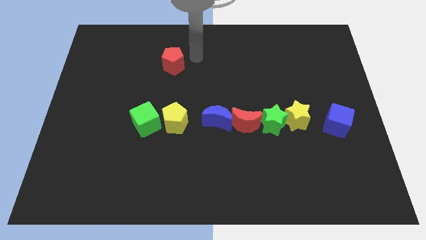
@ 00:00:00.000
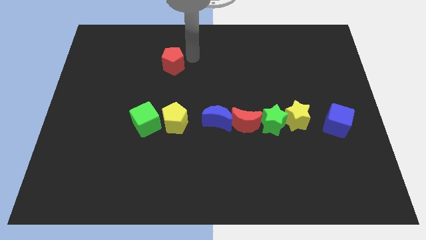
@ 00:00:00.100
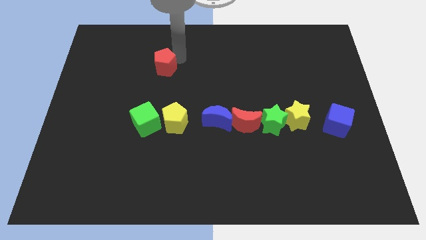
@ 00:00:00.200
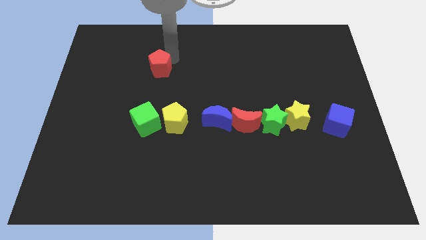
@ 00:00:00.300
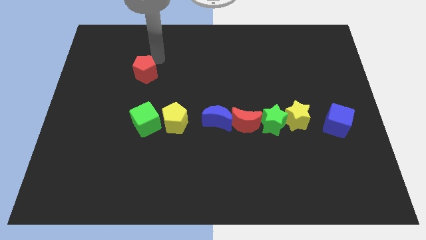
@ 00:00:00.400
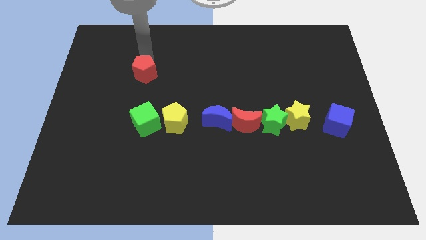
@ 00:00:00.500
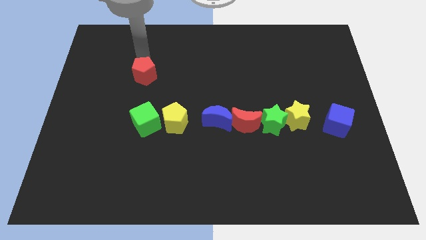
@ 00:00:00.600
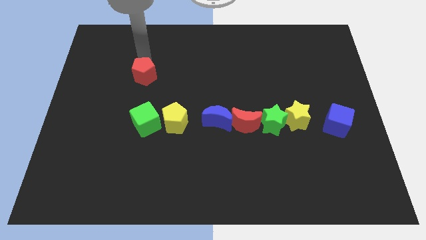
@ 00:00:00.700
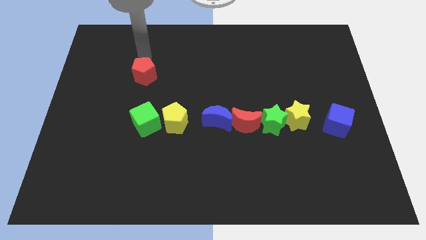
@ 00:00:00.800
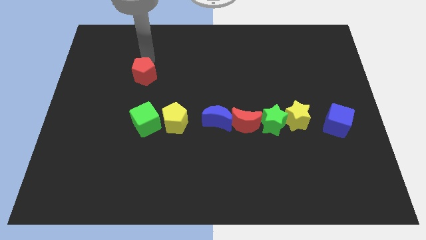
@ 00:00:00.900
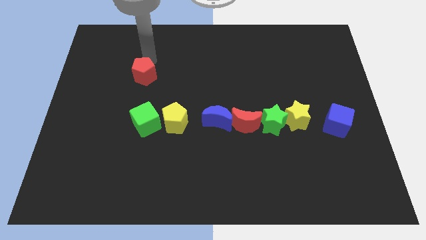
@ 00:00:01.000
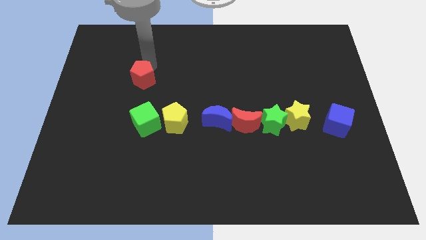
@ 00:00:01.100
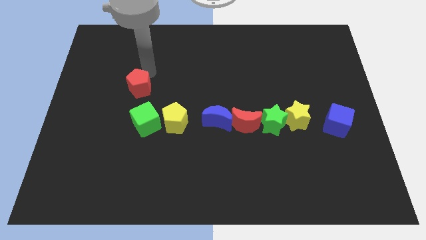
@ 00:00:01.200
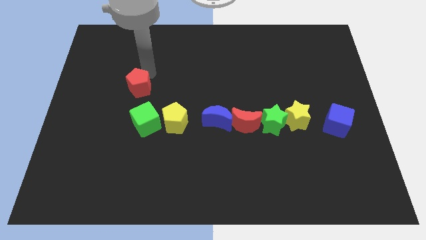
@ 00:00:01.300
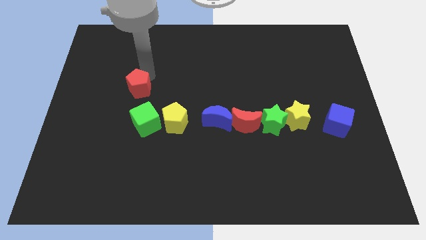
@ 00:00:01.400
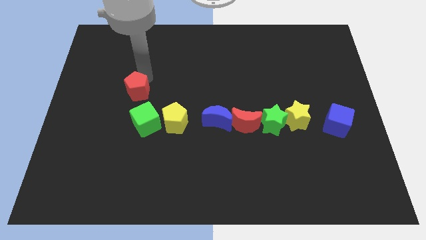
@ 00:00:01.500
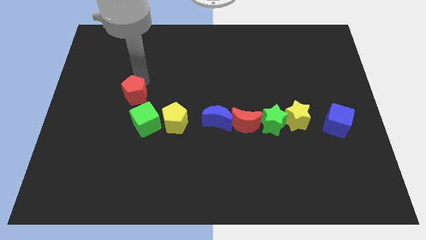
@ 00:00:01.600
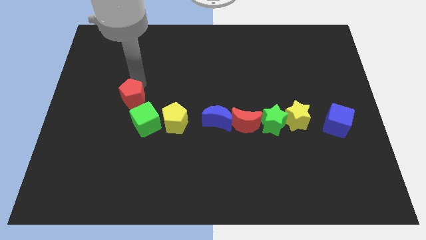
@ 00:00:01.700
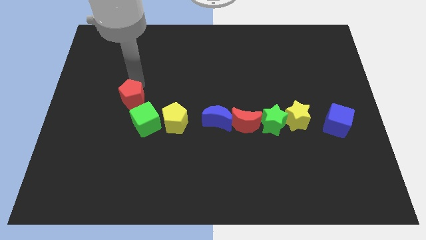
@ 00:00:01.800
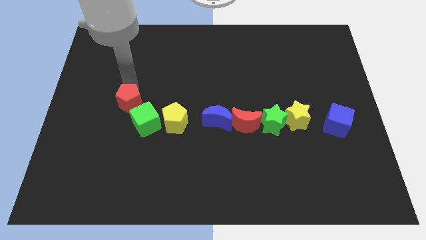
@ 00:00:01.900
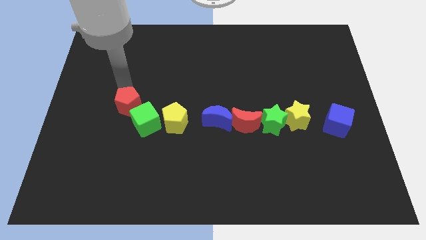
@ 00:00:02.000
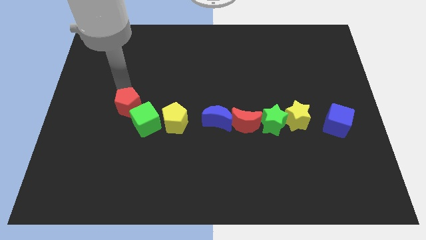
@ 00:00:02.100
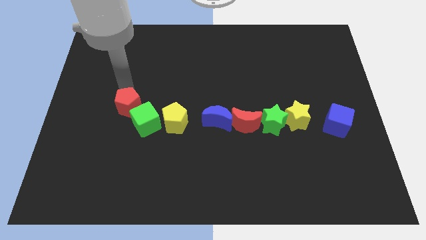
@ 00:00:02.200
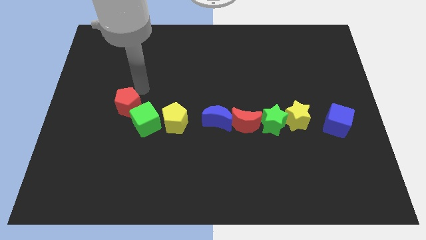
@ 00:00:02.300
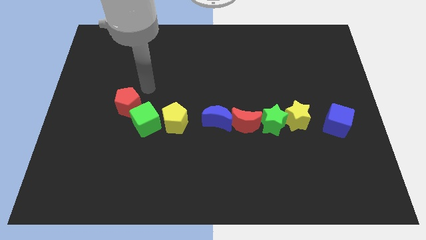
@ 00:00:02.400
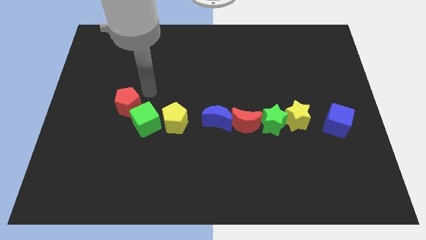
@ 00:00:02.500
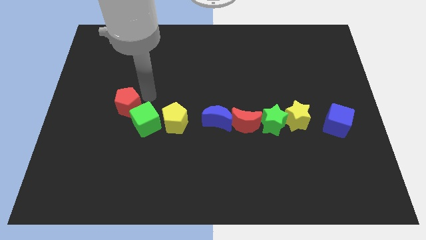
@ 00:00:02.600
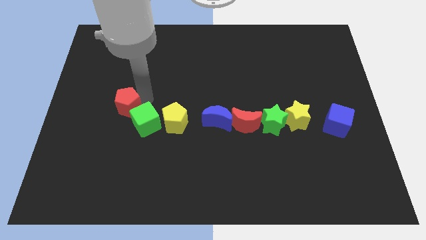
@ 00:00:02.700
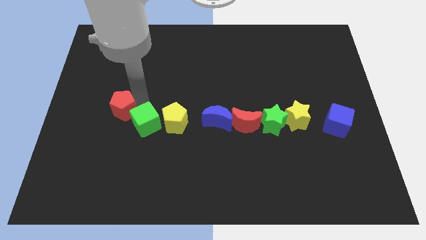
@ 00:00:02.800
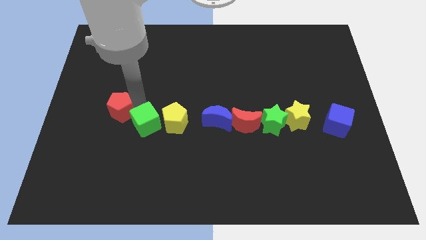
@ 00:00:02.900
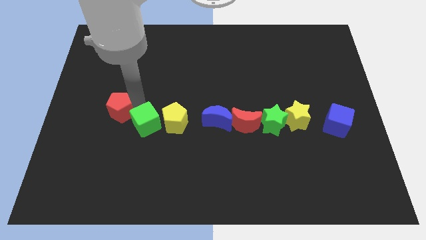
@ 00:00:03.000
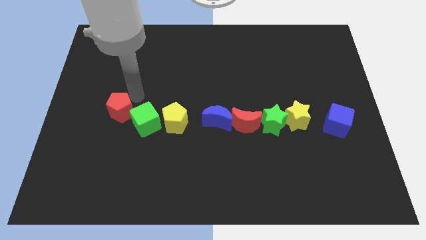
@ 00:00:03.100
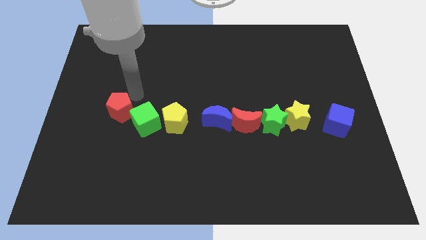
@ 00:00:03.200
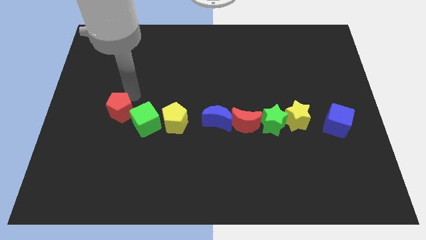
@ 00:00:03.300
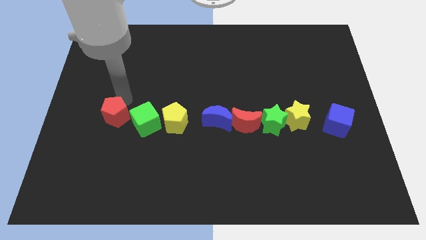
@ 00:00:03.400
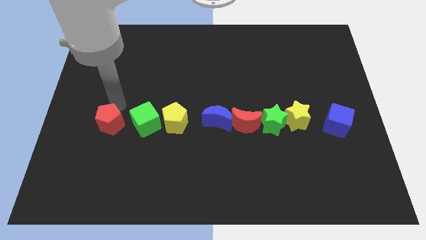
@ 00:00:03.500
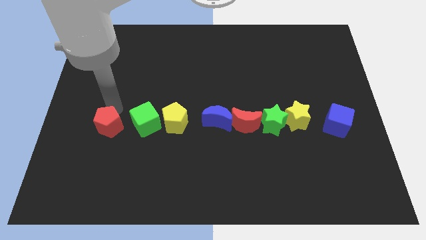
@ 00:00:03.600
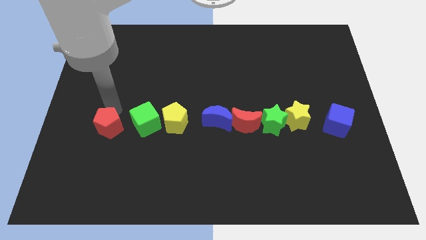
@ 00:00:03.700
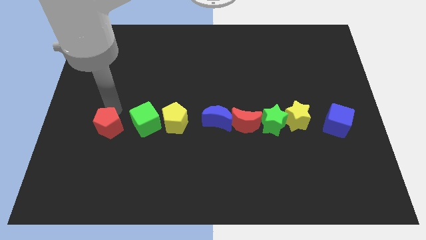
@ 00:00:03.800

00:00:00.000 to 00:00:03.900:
place the red pentagon left to the green cube

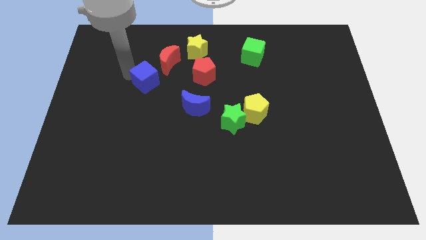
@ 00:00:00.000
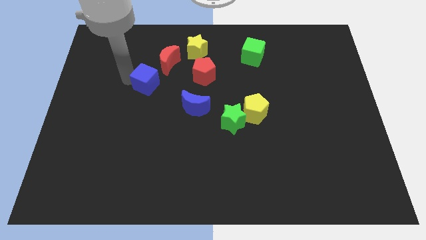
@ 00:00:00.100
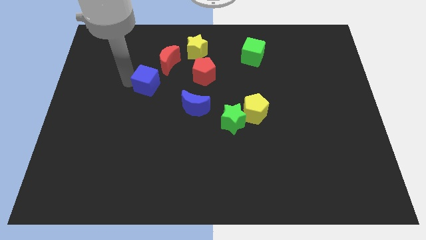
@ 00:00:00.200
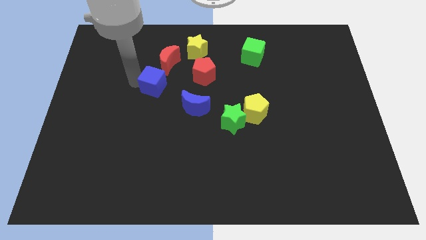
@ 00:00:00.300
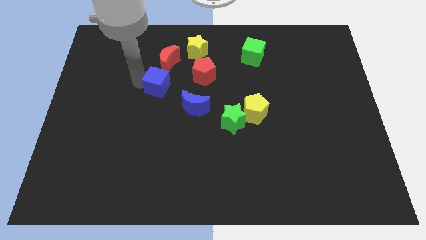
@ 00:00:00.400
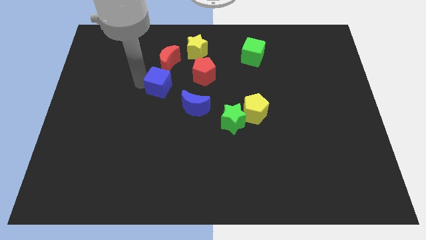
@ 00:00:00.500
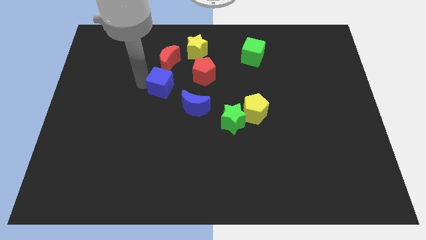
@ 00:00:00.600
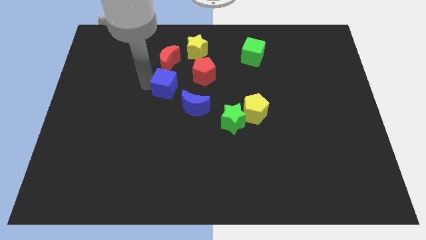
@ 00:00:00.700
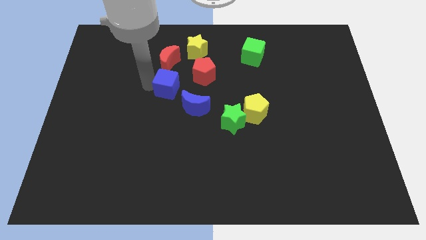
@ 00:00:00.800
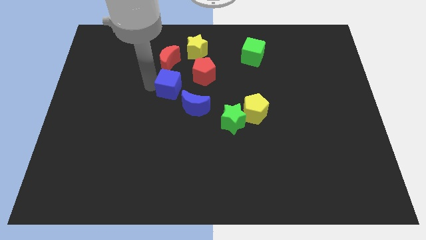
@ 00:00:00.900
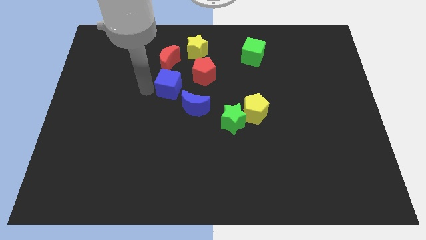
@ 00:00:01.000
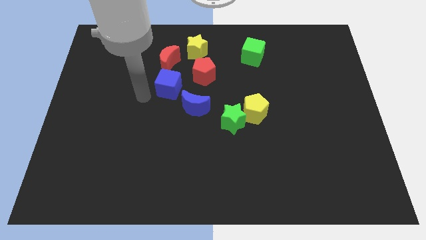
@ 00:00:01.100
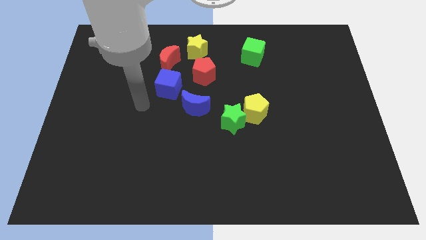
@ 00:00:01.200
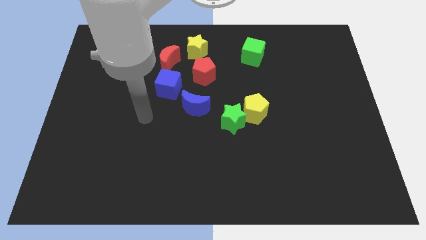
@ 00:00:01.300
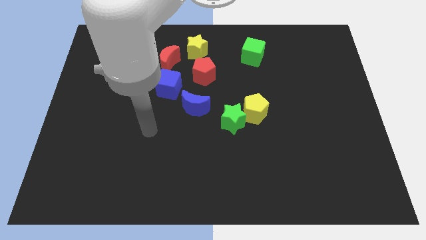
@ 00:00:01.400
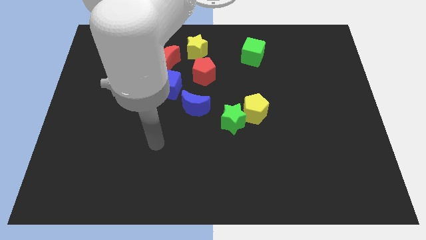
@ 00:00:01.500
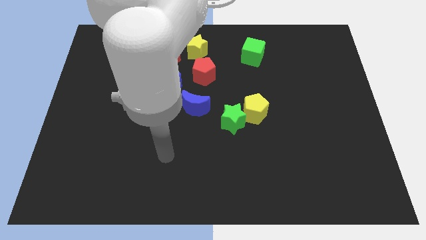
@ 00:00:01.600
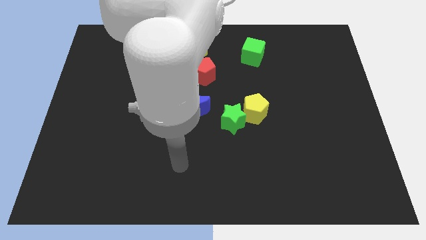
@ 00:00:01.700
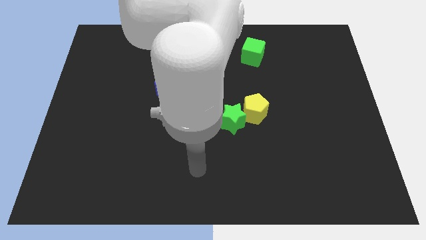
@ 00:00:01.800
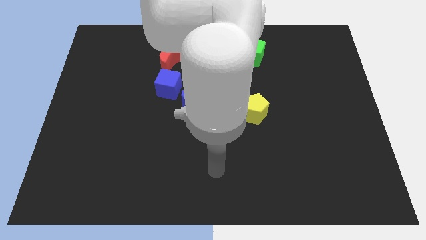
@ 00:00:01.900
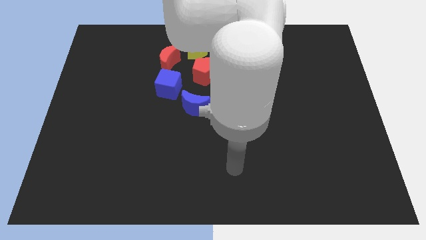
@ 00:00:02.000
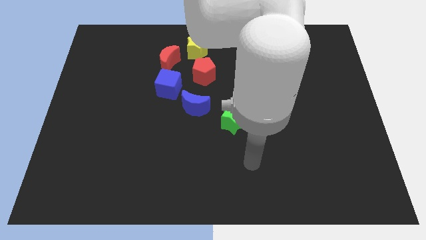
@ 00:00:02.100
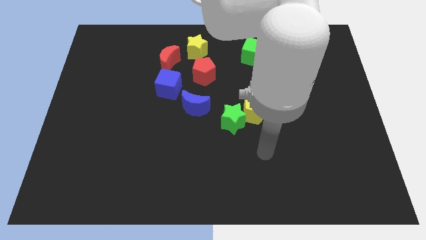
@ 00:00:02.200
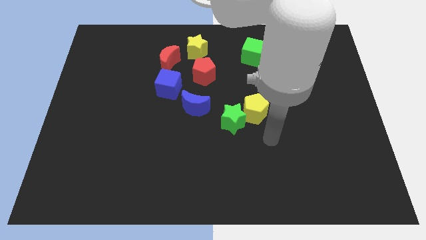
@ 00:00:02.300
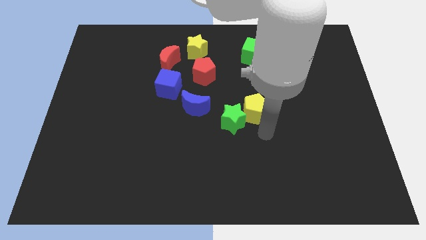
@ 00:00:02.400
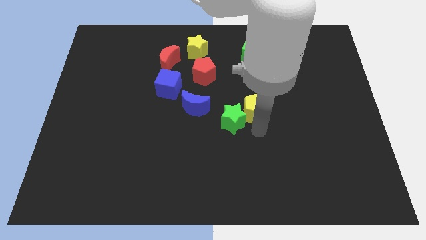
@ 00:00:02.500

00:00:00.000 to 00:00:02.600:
move the blue cube diagonal to the blue moon

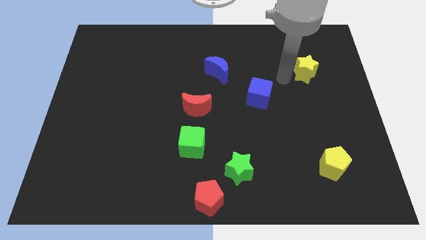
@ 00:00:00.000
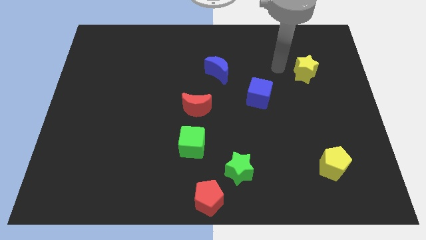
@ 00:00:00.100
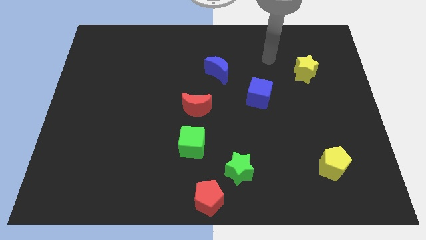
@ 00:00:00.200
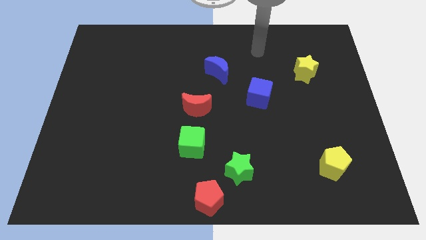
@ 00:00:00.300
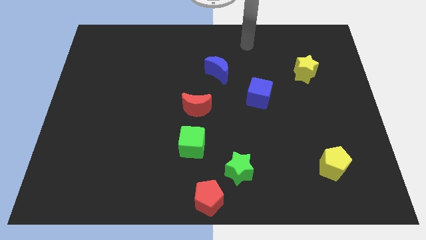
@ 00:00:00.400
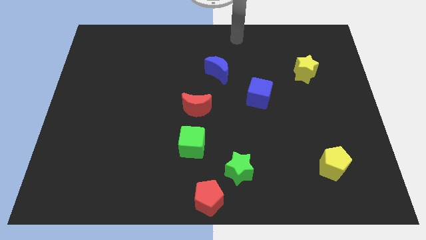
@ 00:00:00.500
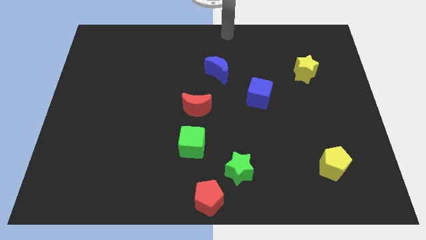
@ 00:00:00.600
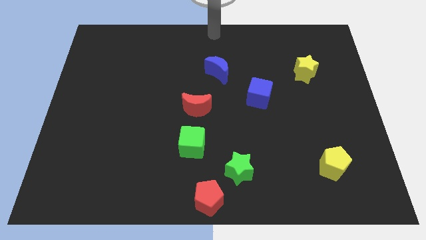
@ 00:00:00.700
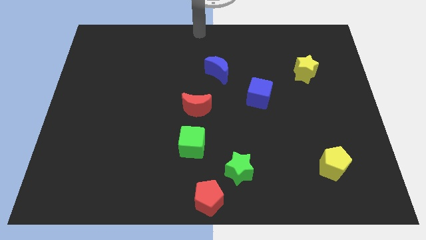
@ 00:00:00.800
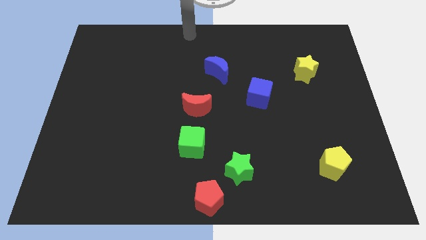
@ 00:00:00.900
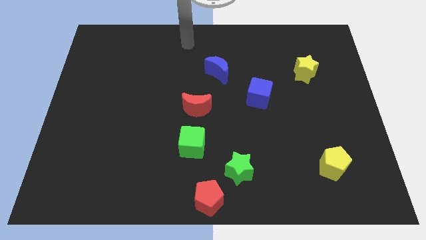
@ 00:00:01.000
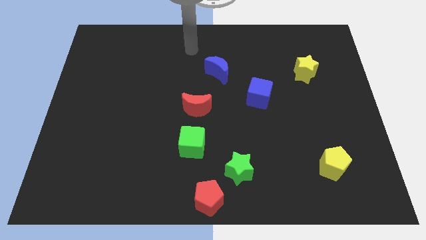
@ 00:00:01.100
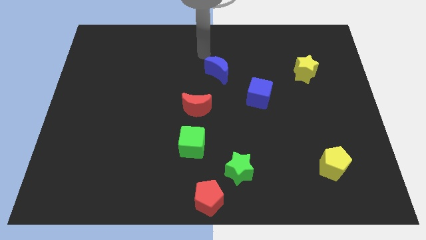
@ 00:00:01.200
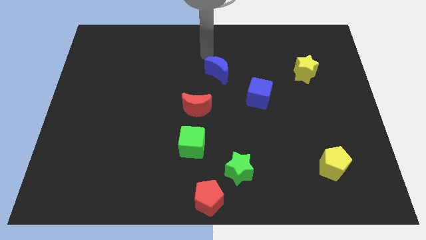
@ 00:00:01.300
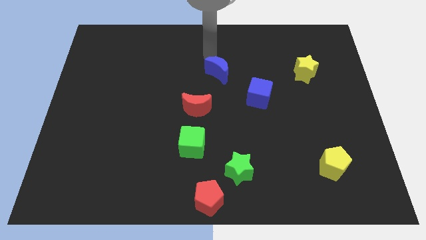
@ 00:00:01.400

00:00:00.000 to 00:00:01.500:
place your hand above the blue crescent

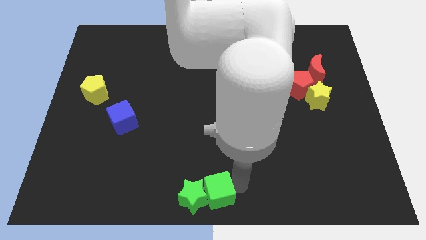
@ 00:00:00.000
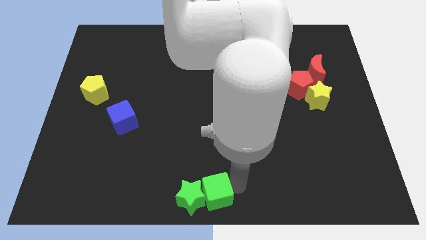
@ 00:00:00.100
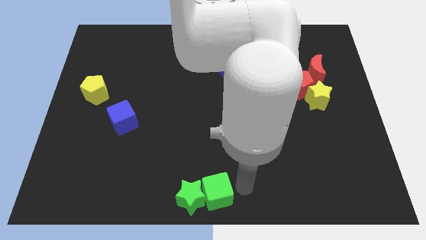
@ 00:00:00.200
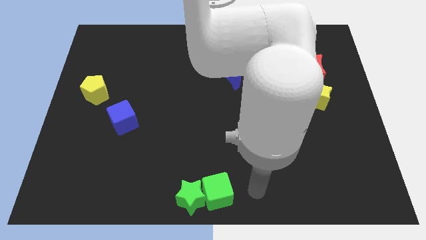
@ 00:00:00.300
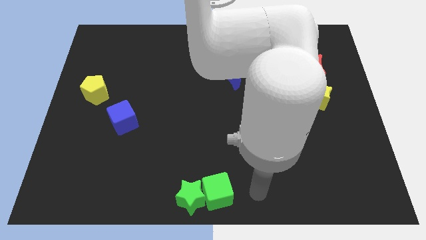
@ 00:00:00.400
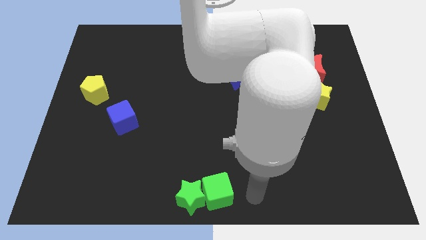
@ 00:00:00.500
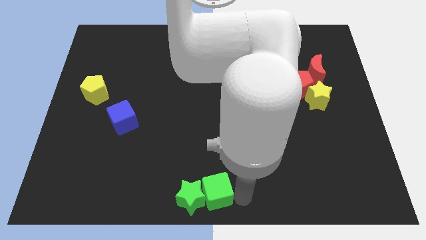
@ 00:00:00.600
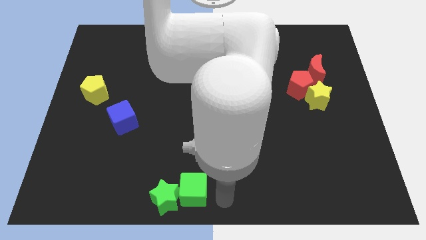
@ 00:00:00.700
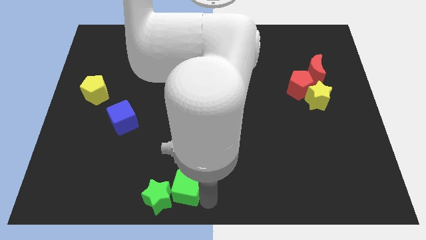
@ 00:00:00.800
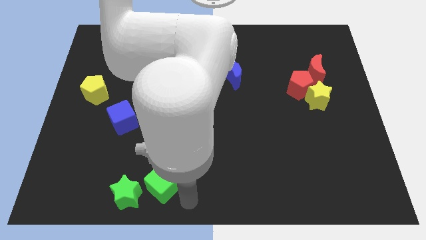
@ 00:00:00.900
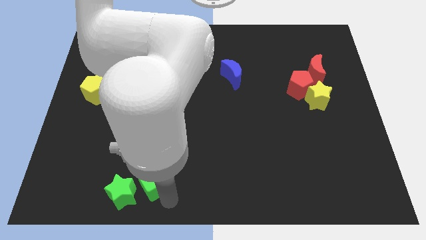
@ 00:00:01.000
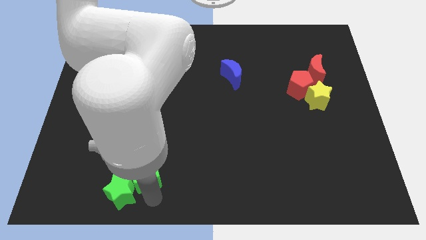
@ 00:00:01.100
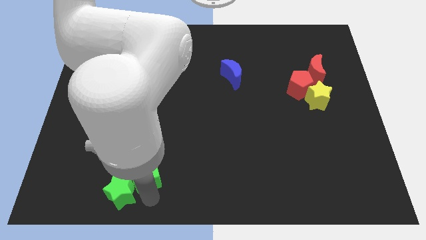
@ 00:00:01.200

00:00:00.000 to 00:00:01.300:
push green cube diagonally towards blue cube
